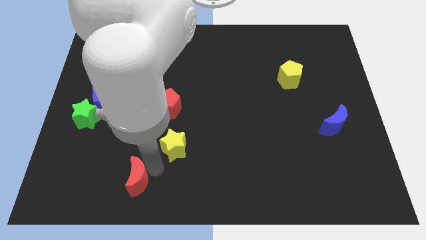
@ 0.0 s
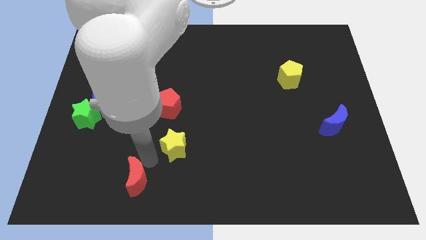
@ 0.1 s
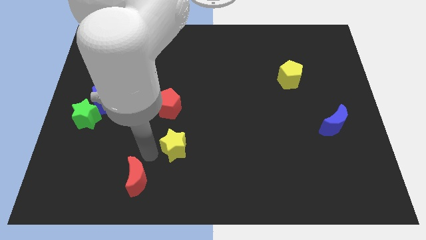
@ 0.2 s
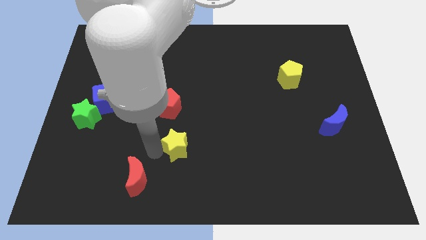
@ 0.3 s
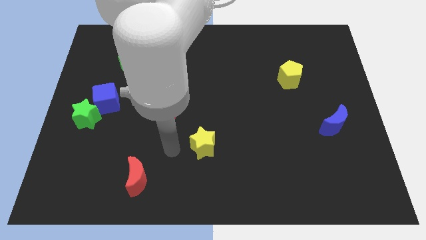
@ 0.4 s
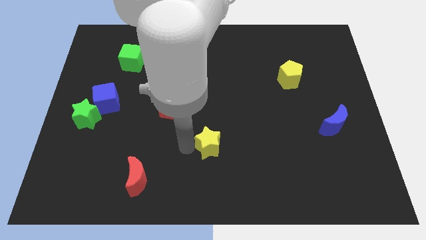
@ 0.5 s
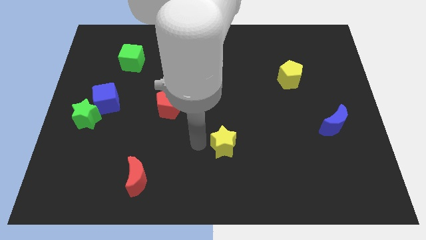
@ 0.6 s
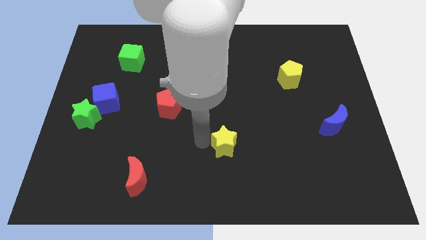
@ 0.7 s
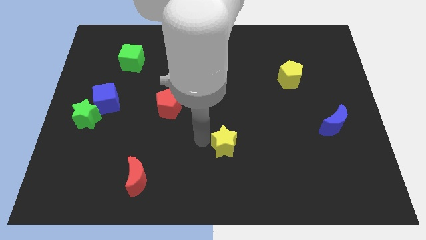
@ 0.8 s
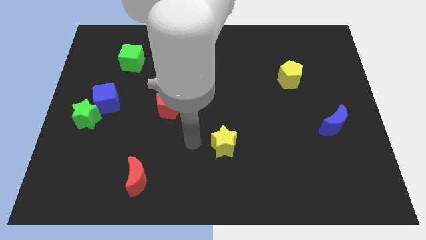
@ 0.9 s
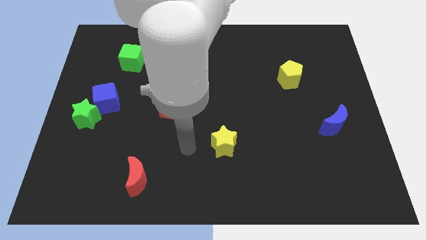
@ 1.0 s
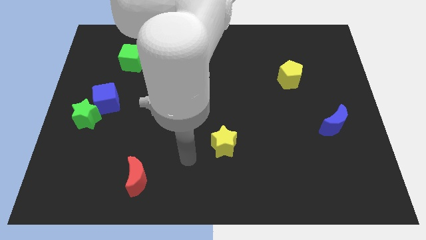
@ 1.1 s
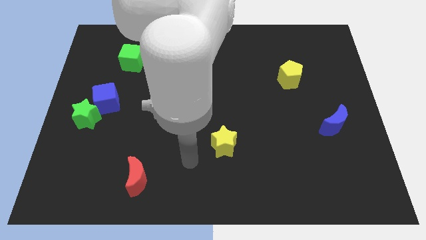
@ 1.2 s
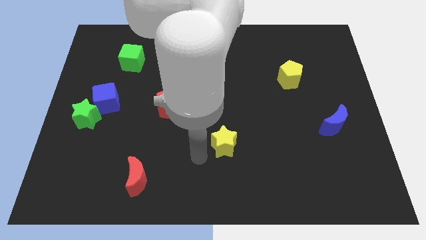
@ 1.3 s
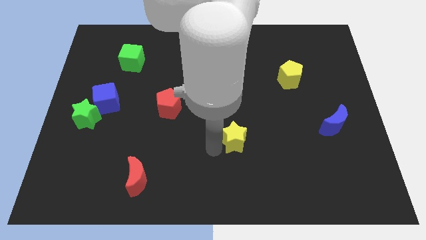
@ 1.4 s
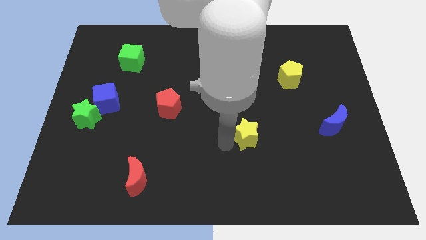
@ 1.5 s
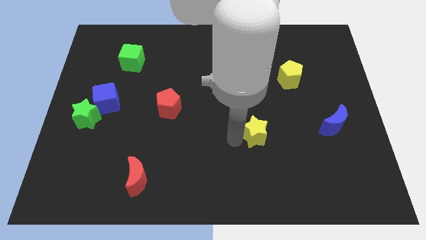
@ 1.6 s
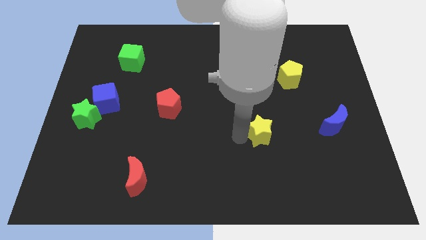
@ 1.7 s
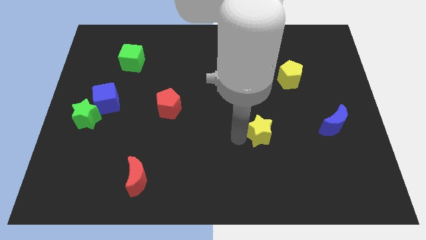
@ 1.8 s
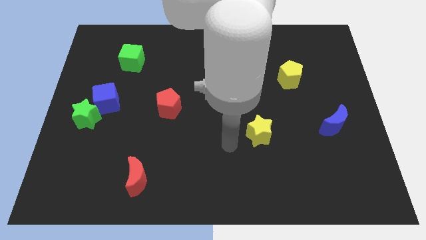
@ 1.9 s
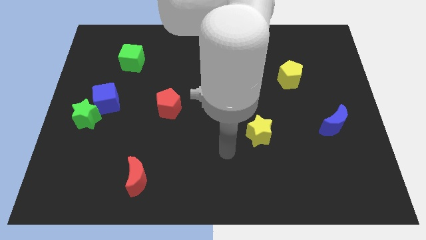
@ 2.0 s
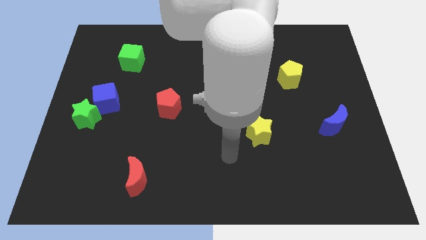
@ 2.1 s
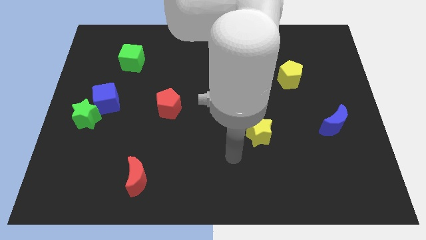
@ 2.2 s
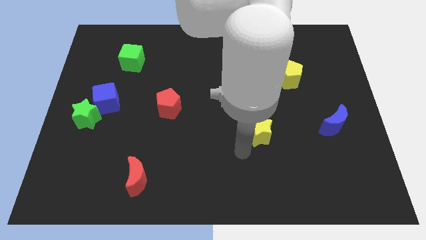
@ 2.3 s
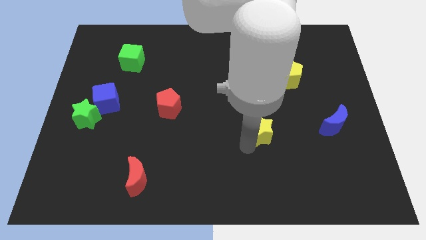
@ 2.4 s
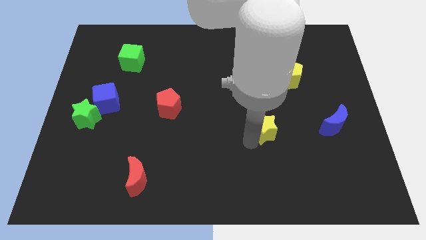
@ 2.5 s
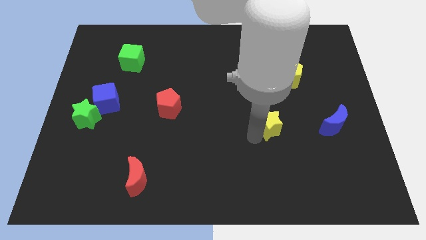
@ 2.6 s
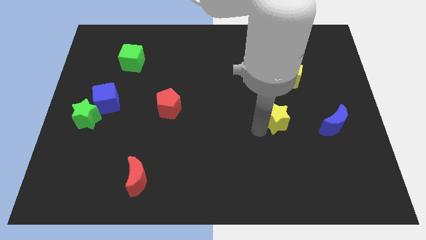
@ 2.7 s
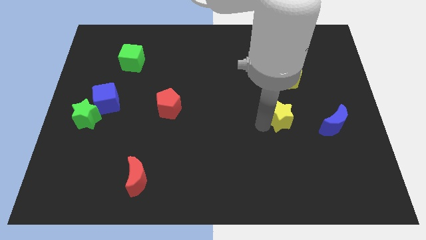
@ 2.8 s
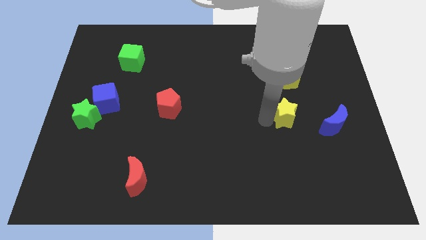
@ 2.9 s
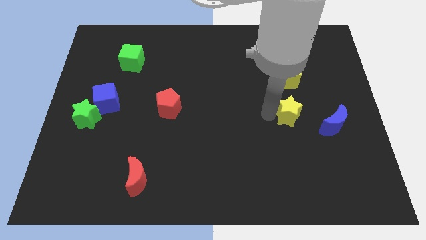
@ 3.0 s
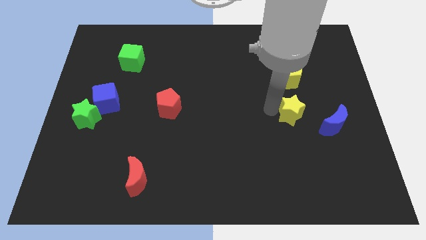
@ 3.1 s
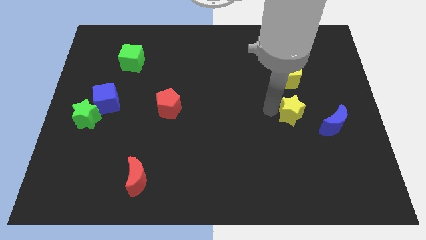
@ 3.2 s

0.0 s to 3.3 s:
move the yellow pentagon to the top of the yellow star

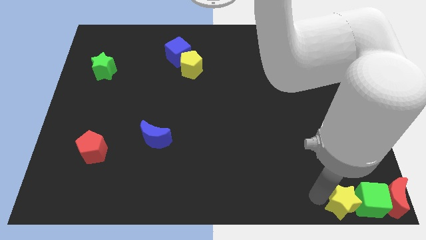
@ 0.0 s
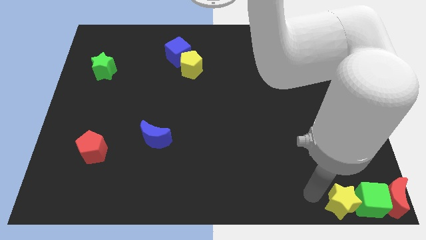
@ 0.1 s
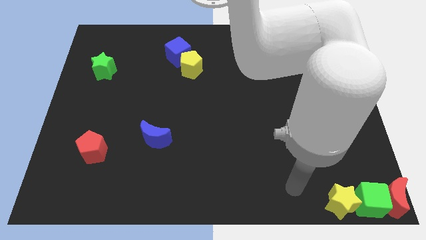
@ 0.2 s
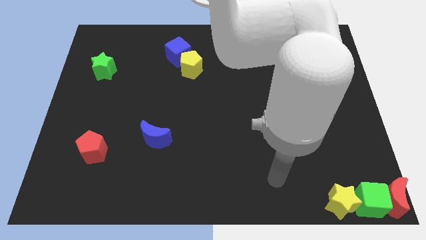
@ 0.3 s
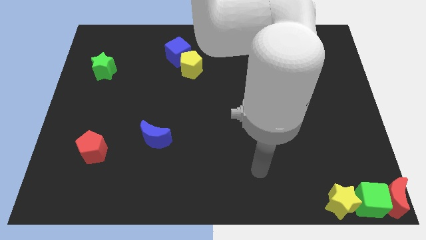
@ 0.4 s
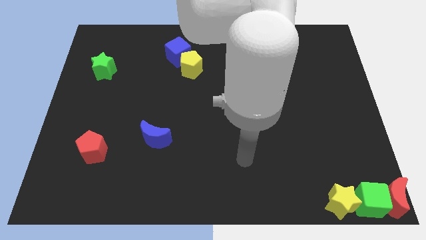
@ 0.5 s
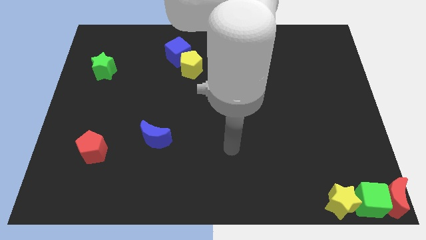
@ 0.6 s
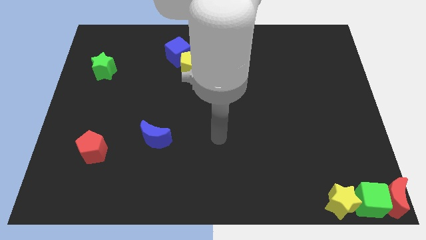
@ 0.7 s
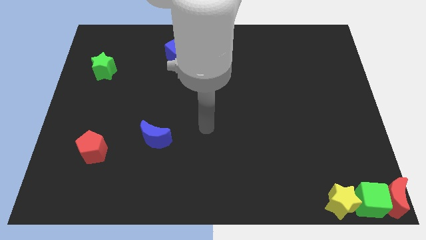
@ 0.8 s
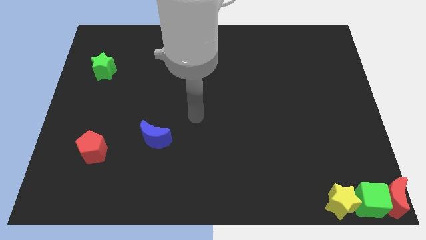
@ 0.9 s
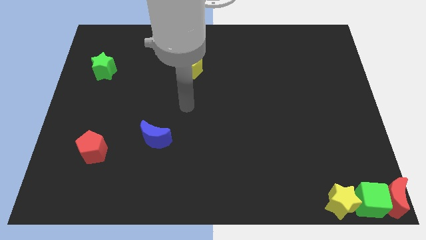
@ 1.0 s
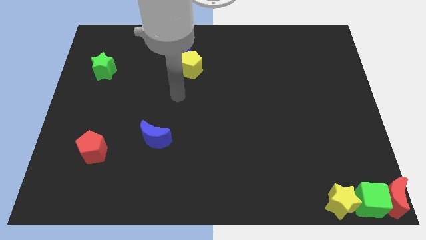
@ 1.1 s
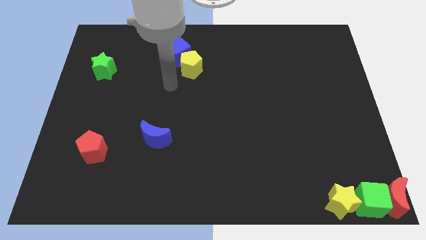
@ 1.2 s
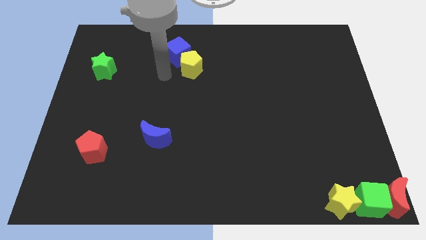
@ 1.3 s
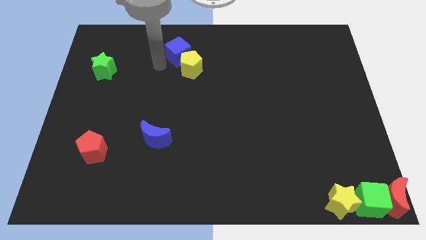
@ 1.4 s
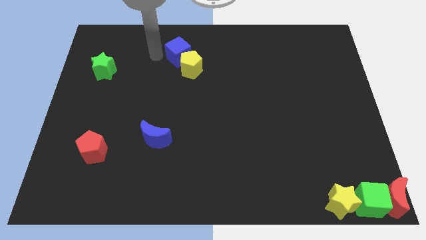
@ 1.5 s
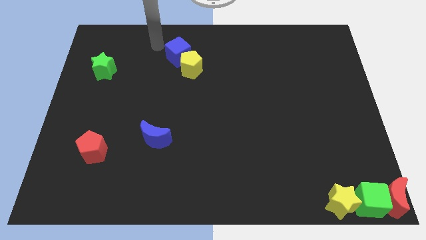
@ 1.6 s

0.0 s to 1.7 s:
move your arm towards the blue cube

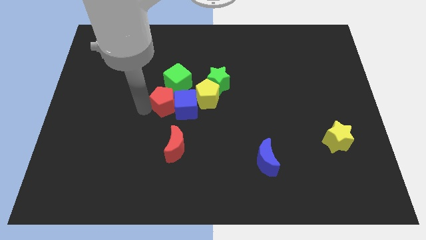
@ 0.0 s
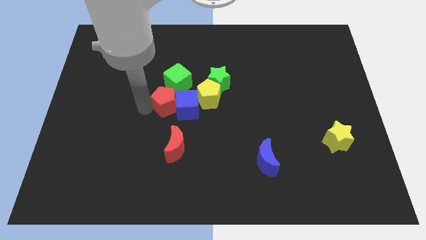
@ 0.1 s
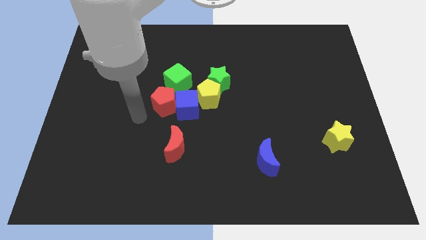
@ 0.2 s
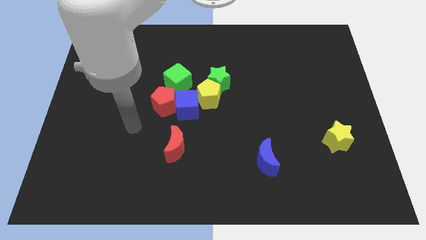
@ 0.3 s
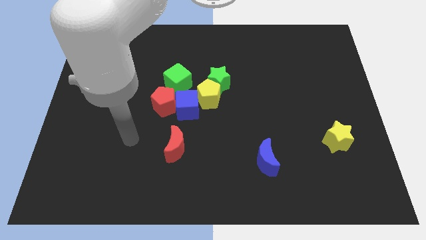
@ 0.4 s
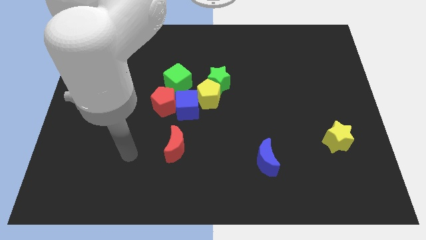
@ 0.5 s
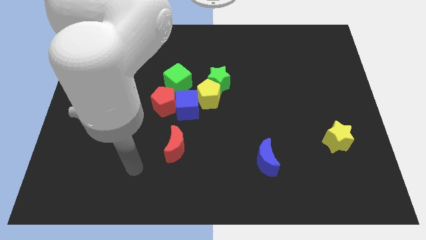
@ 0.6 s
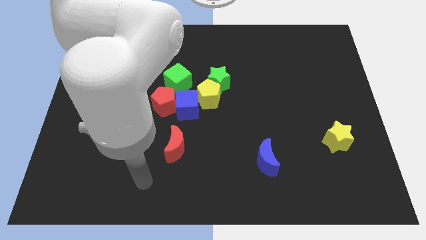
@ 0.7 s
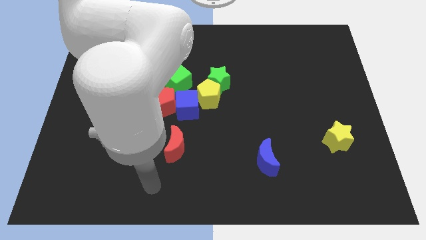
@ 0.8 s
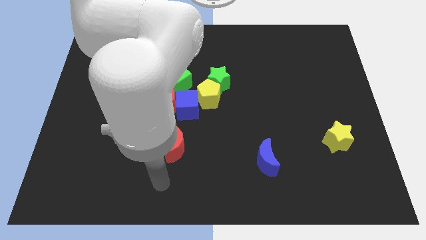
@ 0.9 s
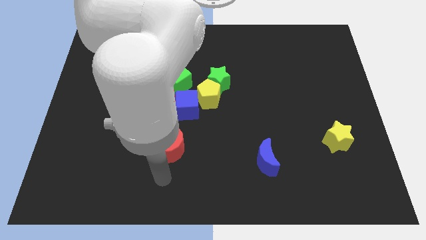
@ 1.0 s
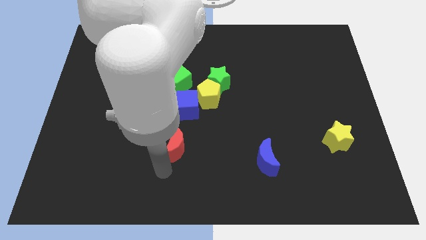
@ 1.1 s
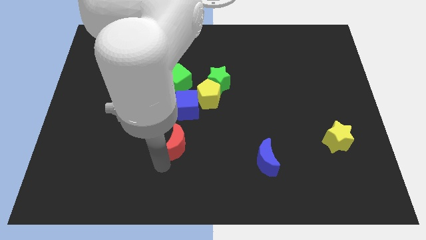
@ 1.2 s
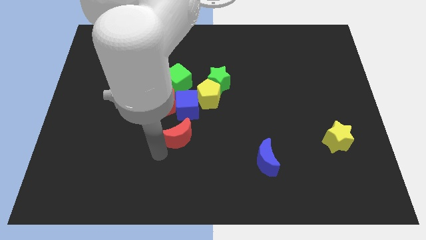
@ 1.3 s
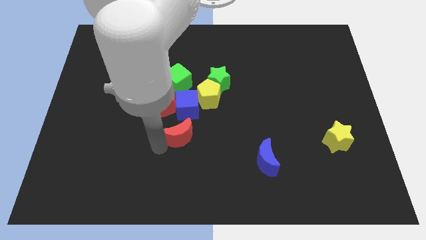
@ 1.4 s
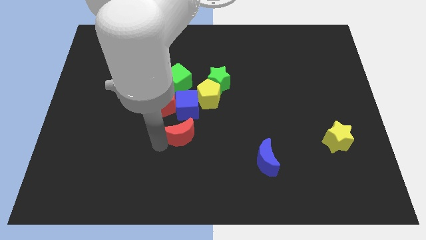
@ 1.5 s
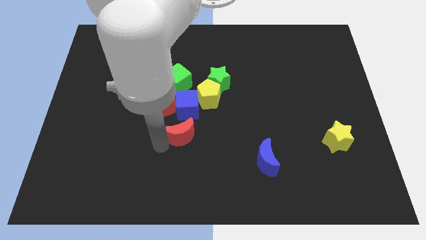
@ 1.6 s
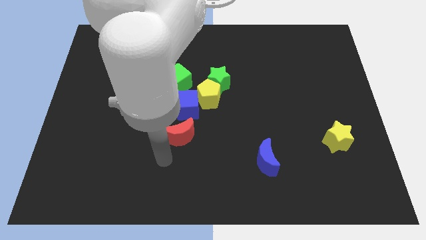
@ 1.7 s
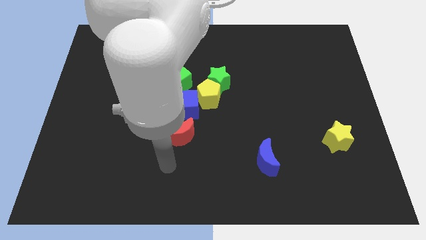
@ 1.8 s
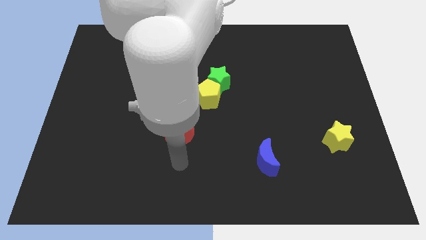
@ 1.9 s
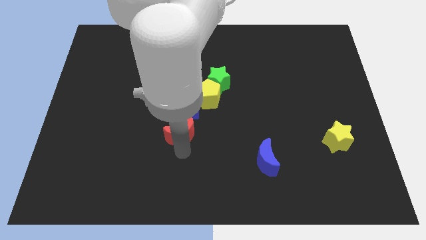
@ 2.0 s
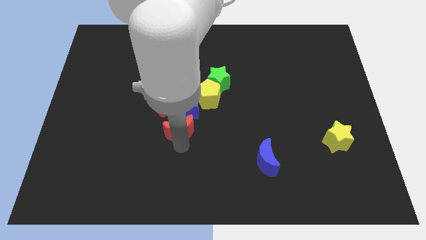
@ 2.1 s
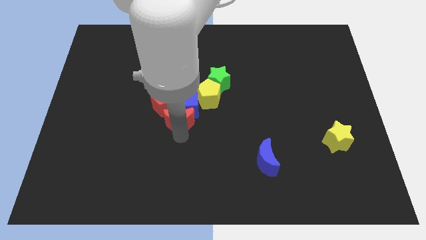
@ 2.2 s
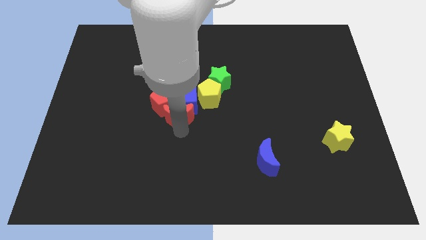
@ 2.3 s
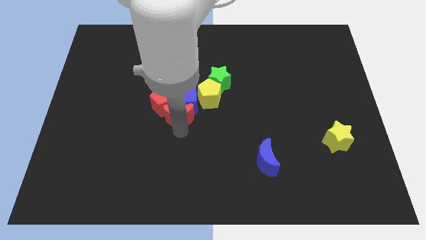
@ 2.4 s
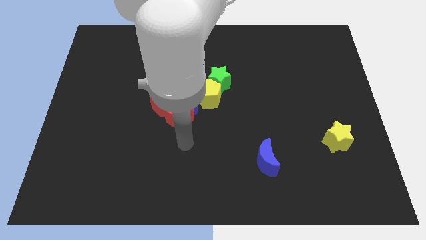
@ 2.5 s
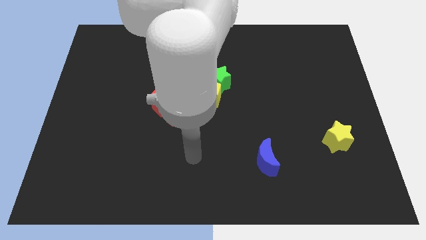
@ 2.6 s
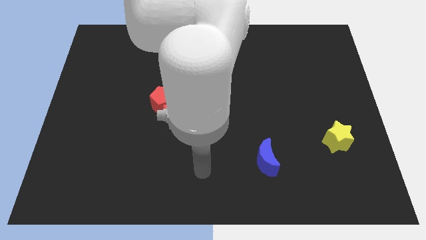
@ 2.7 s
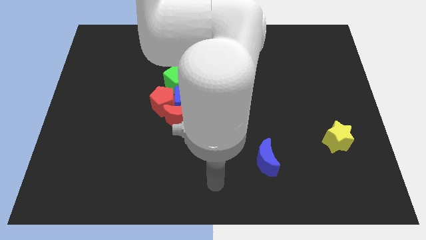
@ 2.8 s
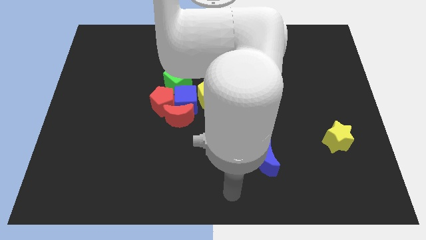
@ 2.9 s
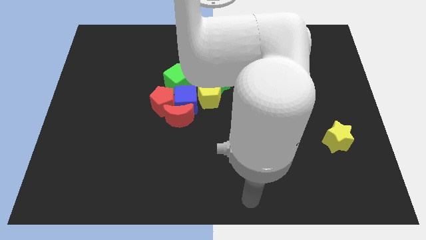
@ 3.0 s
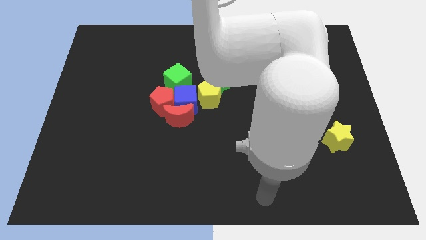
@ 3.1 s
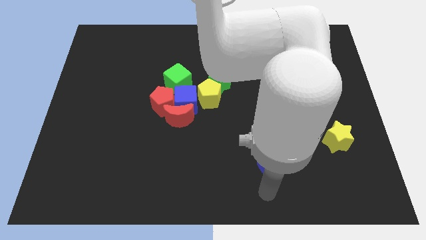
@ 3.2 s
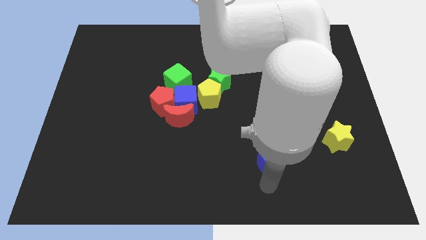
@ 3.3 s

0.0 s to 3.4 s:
place red crescent close to the blue cube

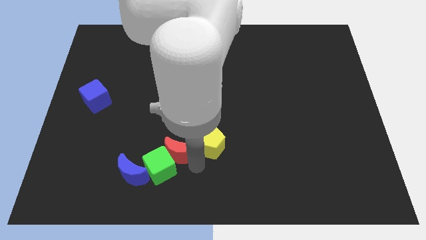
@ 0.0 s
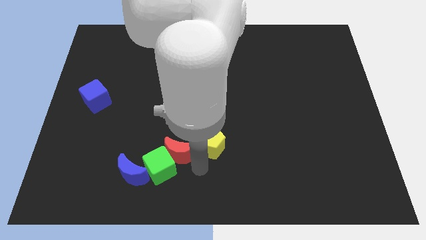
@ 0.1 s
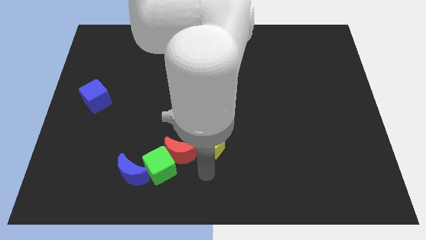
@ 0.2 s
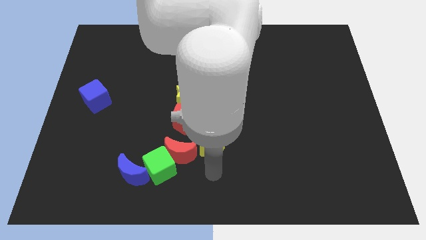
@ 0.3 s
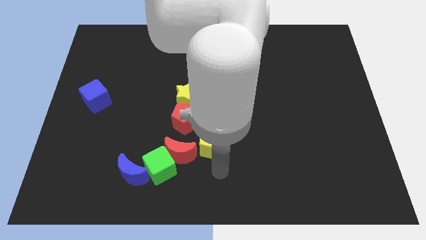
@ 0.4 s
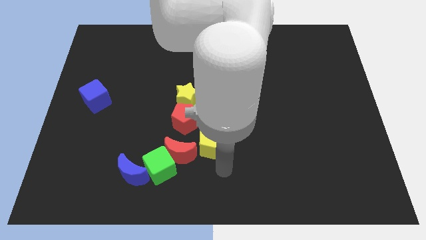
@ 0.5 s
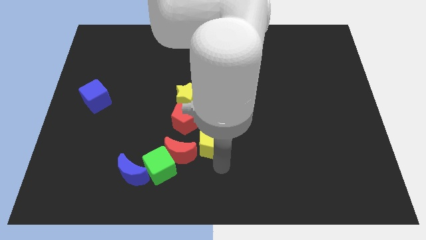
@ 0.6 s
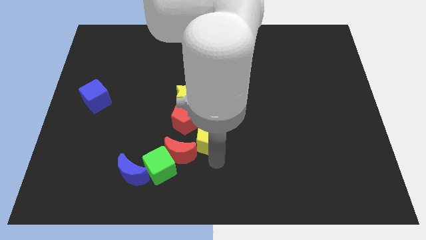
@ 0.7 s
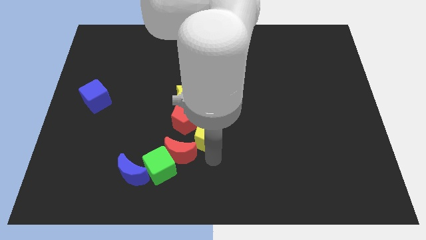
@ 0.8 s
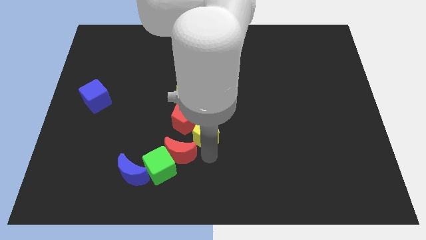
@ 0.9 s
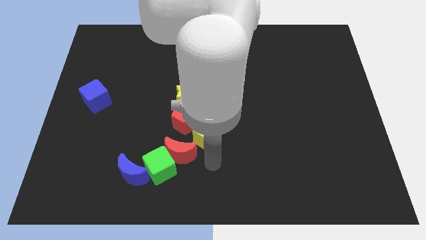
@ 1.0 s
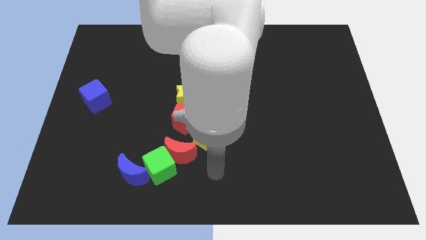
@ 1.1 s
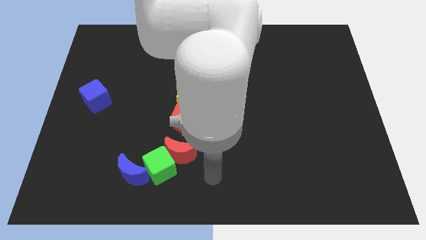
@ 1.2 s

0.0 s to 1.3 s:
push the yellow pentagon below the green star
